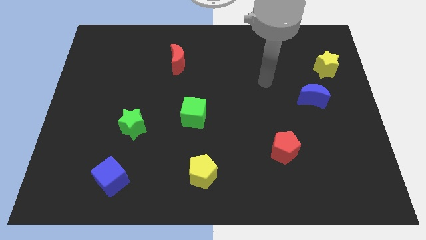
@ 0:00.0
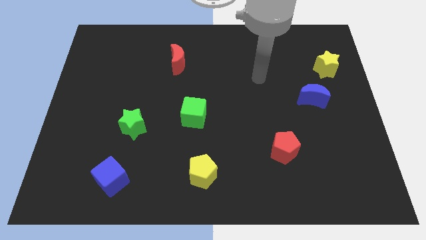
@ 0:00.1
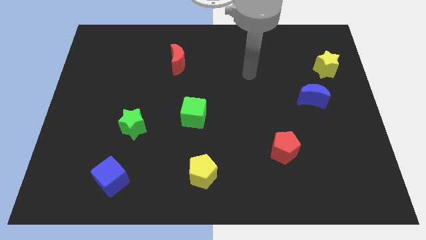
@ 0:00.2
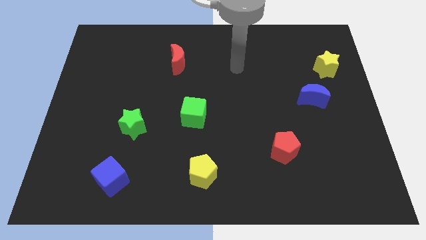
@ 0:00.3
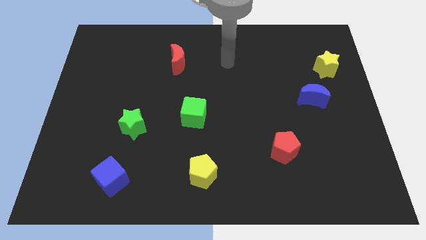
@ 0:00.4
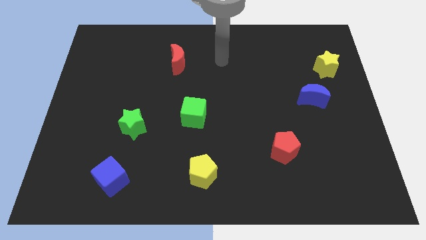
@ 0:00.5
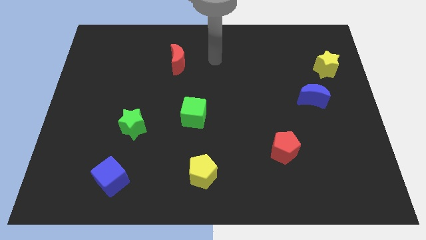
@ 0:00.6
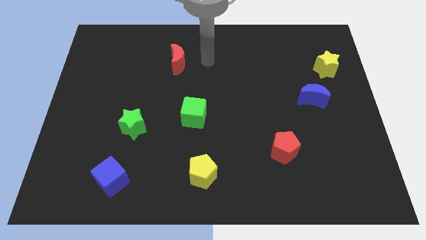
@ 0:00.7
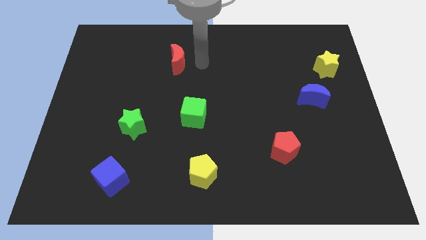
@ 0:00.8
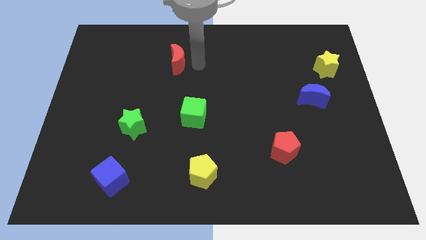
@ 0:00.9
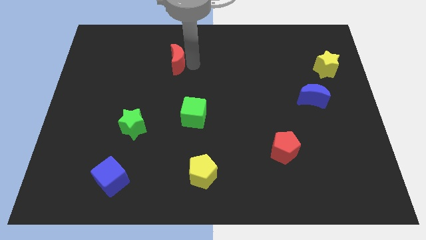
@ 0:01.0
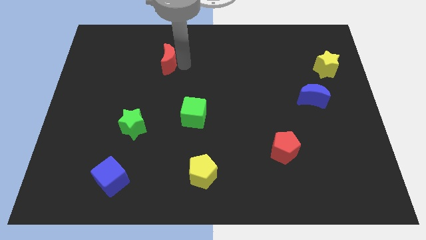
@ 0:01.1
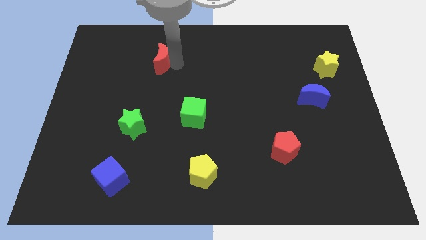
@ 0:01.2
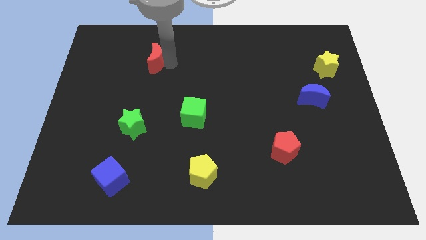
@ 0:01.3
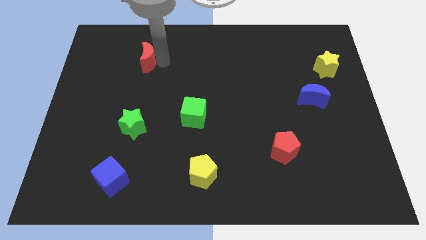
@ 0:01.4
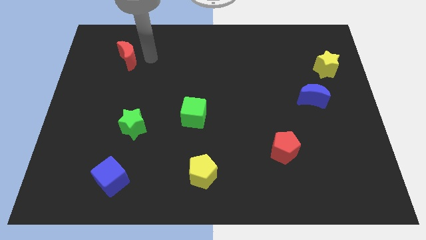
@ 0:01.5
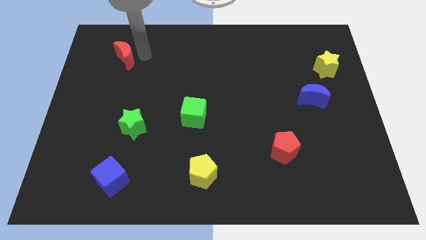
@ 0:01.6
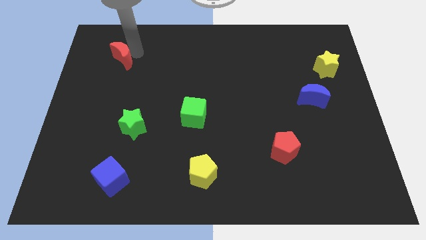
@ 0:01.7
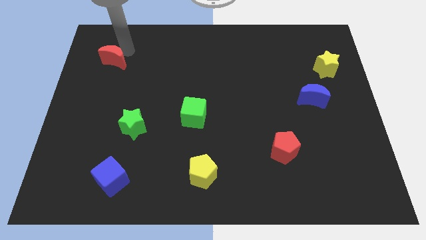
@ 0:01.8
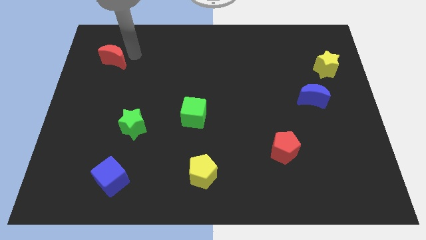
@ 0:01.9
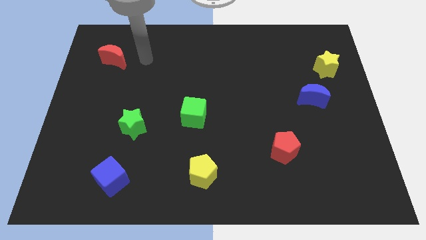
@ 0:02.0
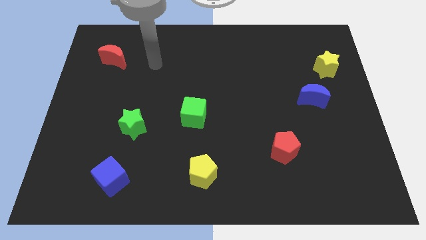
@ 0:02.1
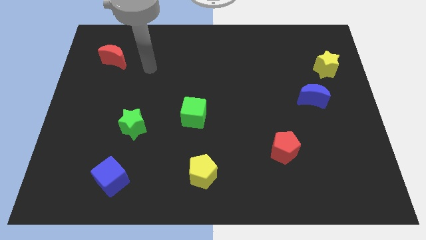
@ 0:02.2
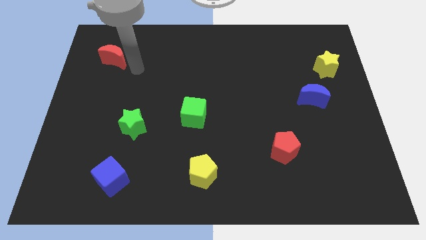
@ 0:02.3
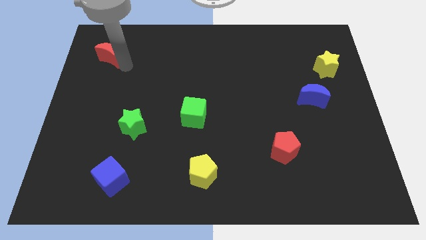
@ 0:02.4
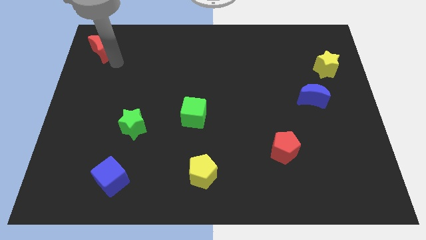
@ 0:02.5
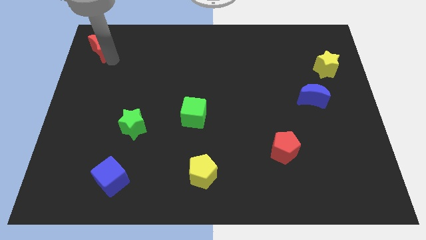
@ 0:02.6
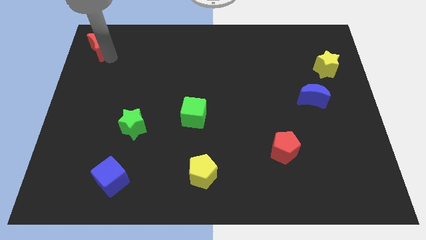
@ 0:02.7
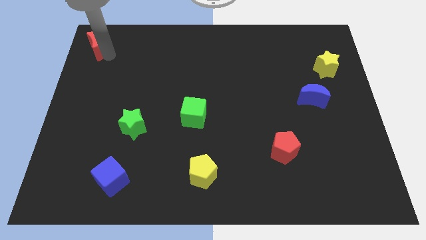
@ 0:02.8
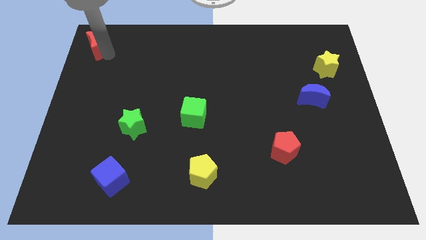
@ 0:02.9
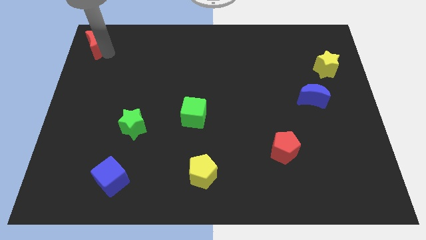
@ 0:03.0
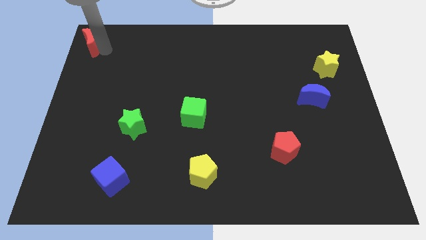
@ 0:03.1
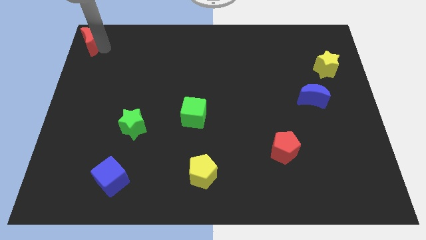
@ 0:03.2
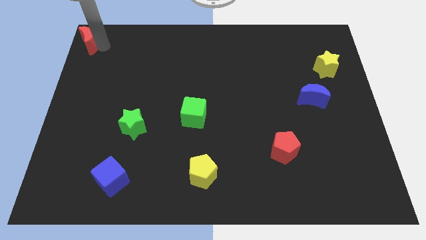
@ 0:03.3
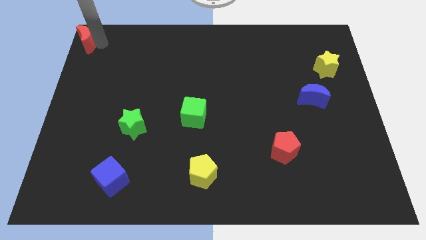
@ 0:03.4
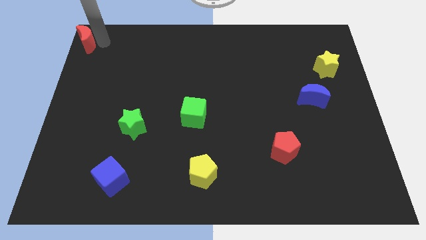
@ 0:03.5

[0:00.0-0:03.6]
push the red crescent to the top left corner of the board

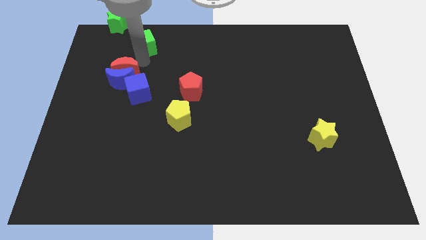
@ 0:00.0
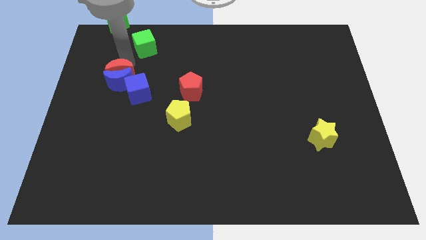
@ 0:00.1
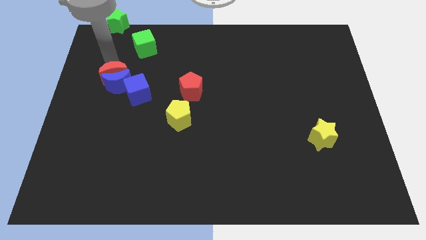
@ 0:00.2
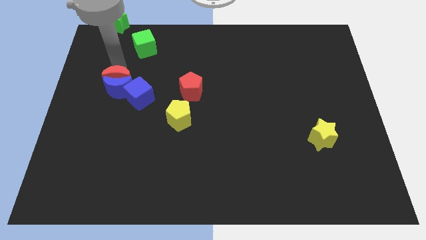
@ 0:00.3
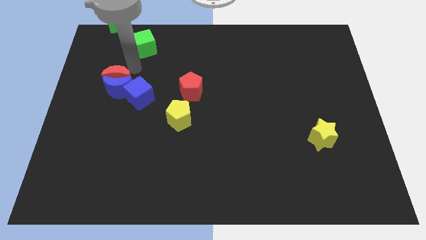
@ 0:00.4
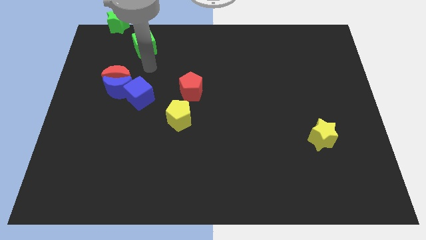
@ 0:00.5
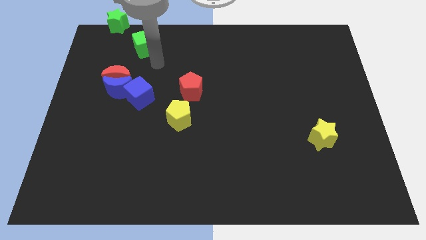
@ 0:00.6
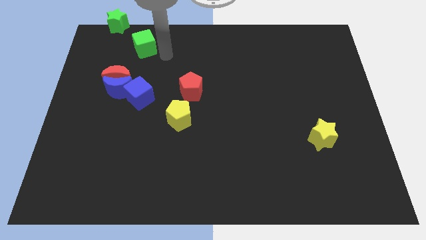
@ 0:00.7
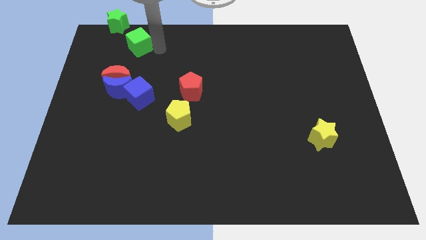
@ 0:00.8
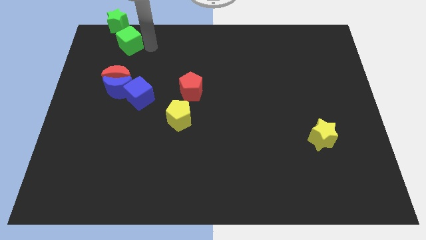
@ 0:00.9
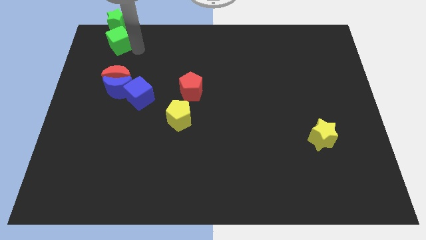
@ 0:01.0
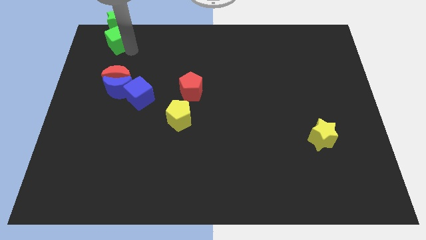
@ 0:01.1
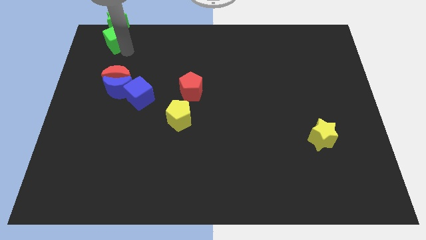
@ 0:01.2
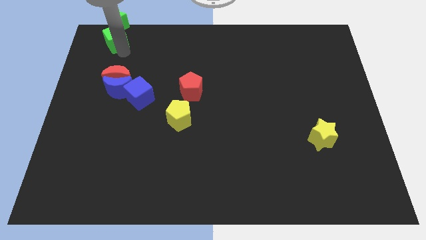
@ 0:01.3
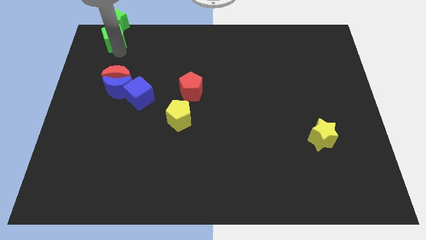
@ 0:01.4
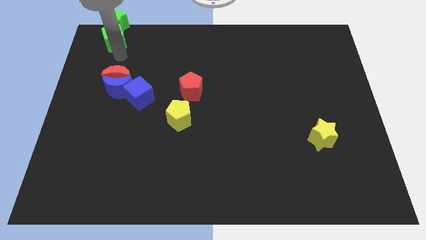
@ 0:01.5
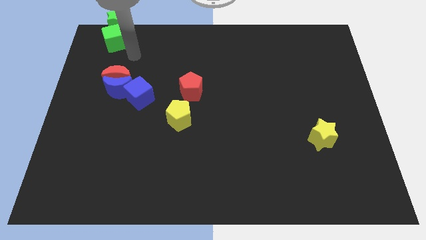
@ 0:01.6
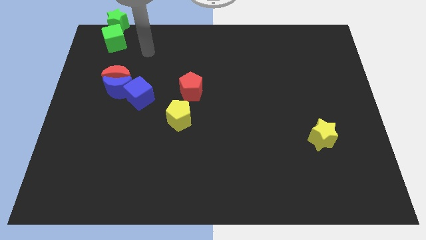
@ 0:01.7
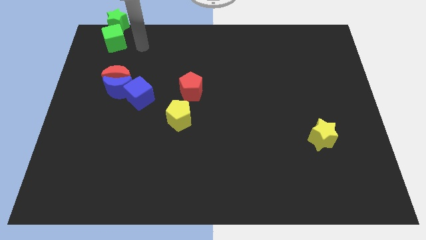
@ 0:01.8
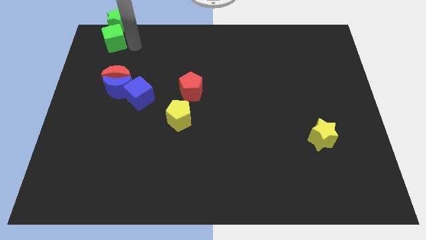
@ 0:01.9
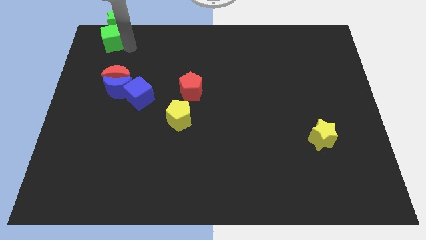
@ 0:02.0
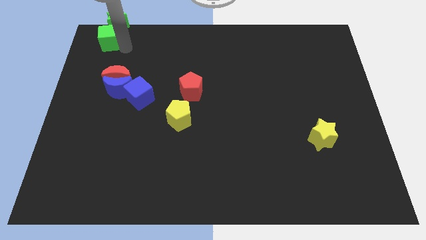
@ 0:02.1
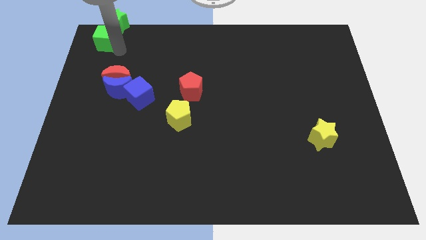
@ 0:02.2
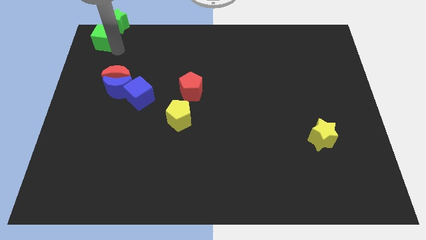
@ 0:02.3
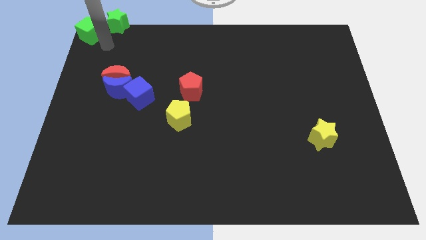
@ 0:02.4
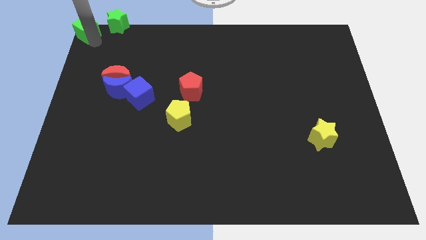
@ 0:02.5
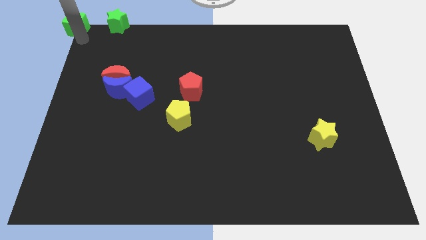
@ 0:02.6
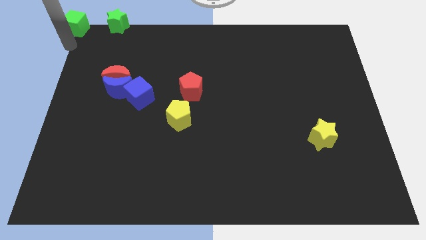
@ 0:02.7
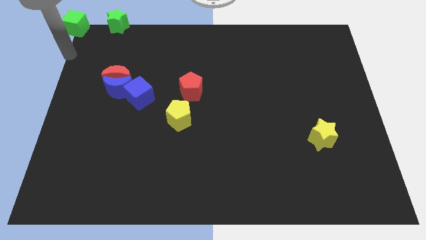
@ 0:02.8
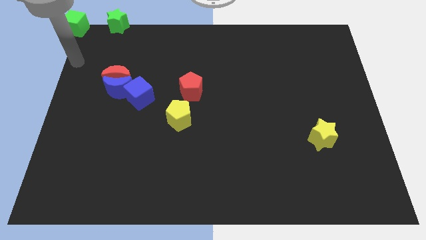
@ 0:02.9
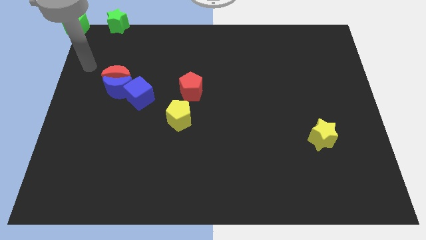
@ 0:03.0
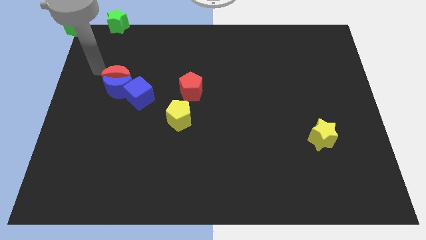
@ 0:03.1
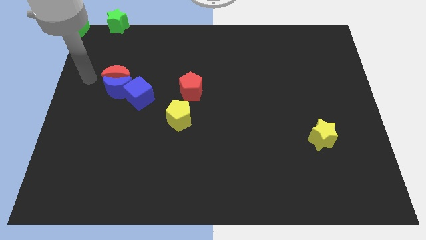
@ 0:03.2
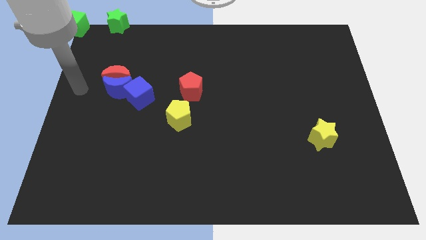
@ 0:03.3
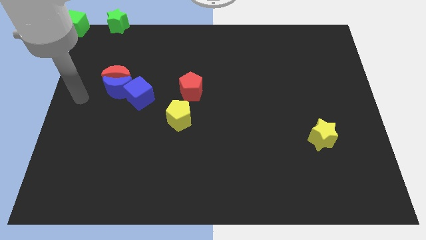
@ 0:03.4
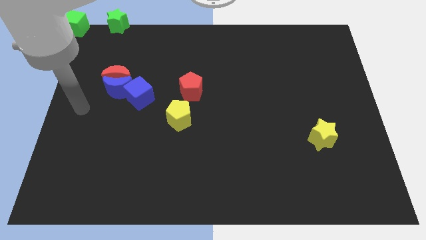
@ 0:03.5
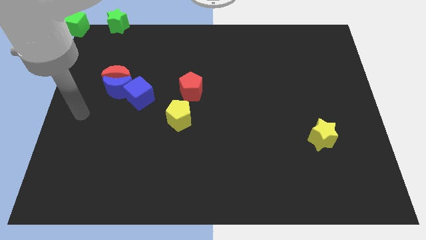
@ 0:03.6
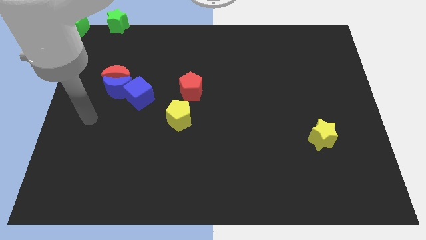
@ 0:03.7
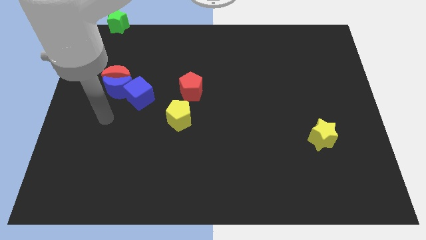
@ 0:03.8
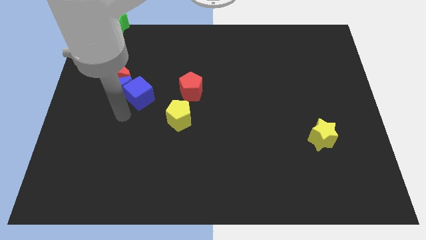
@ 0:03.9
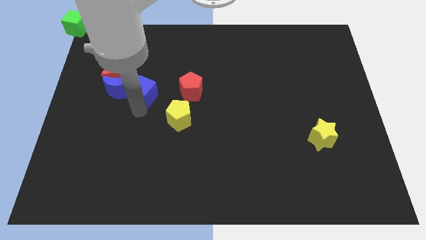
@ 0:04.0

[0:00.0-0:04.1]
move the green cube to the top left corner of the board

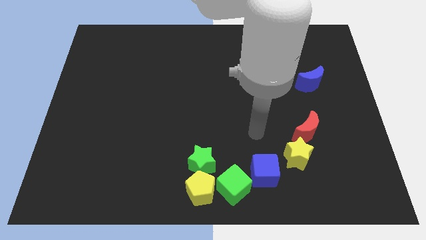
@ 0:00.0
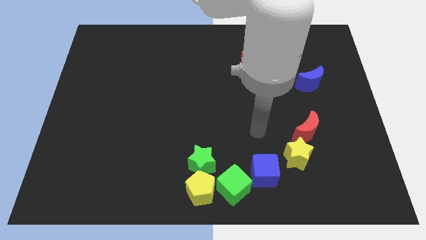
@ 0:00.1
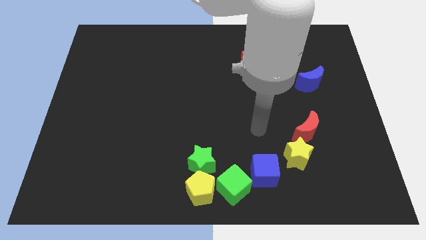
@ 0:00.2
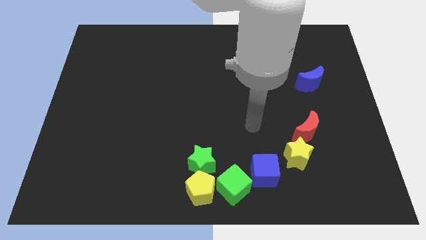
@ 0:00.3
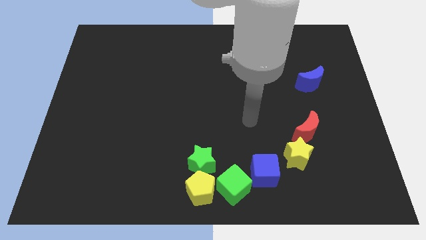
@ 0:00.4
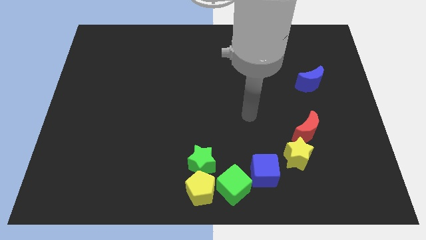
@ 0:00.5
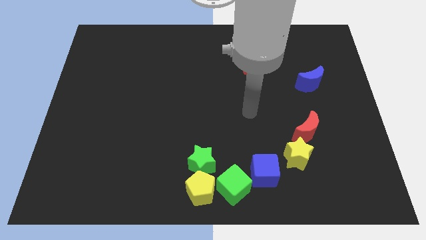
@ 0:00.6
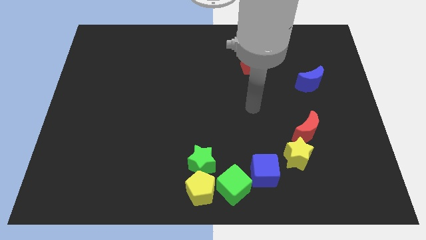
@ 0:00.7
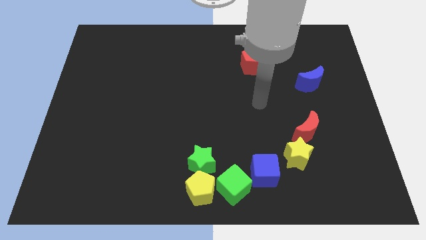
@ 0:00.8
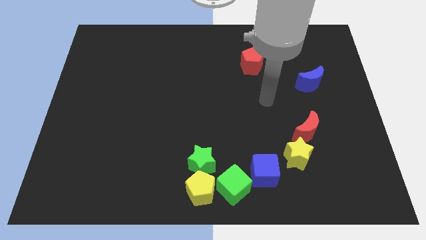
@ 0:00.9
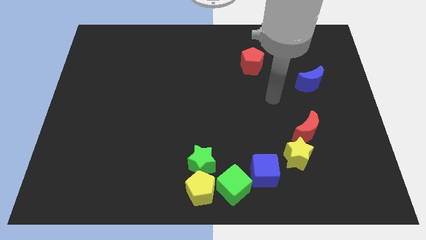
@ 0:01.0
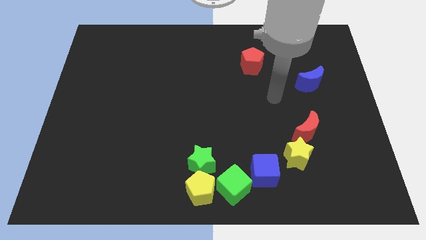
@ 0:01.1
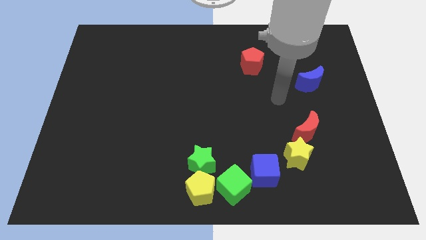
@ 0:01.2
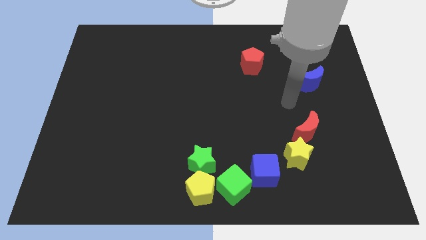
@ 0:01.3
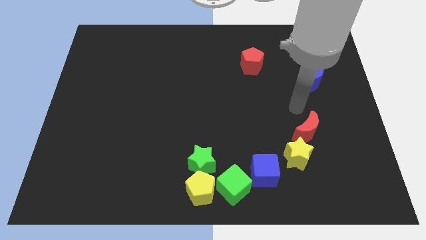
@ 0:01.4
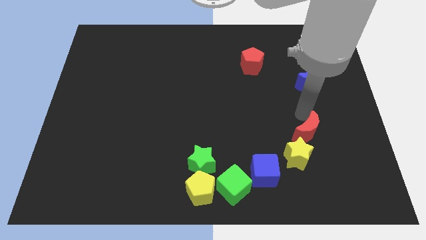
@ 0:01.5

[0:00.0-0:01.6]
move the arm on top of the red crescent
